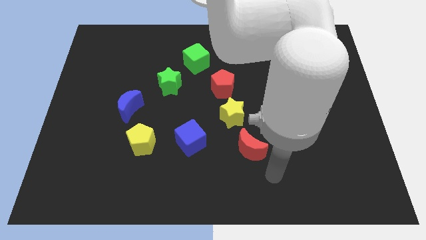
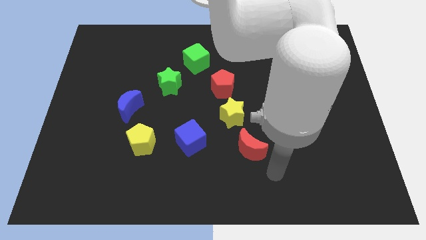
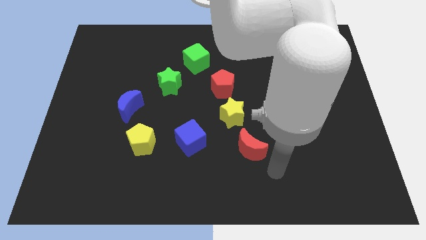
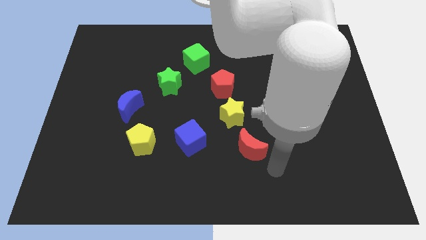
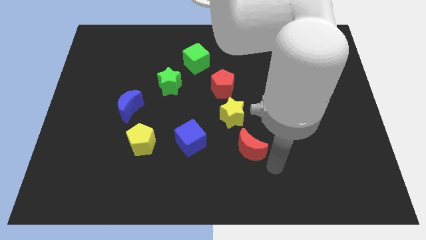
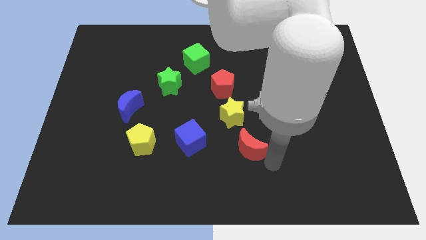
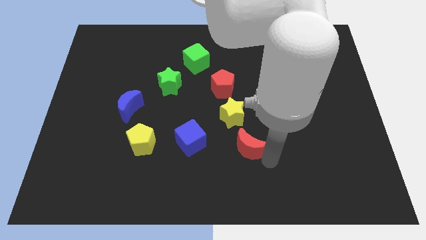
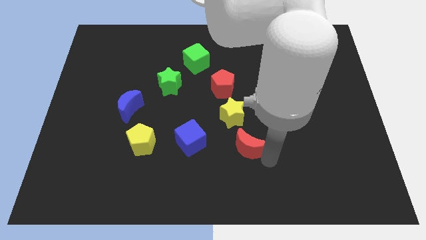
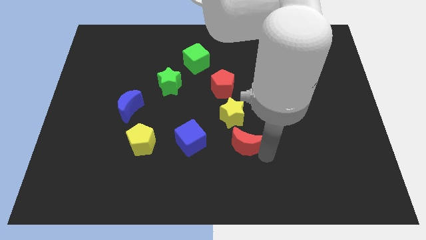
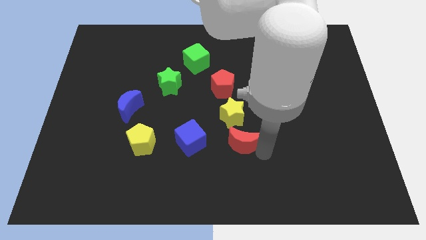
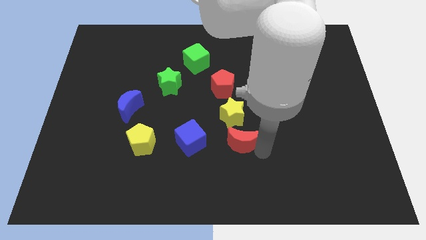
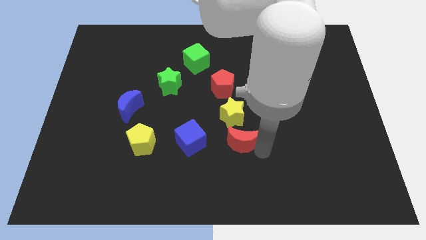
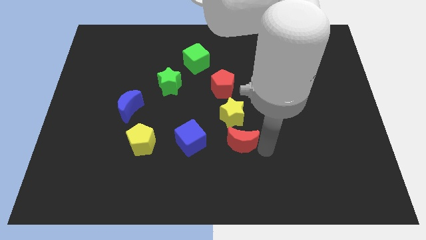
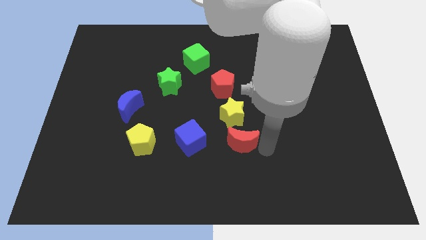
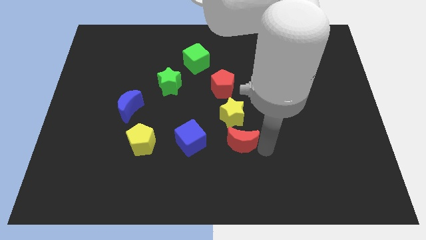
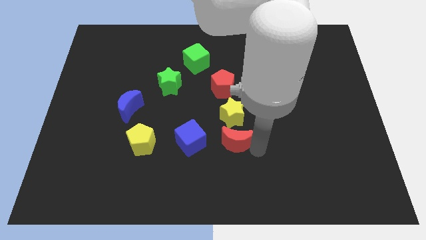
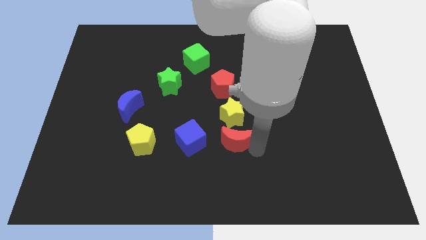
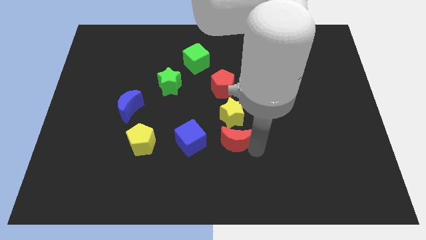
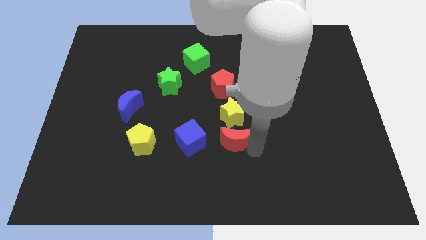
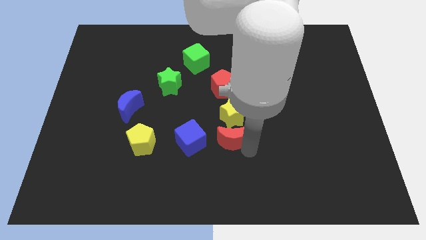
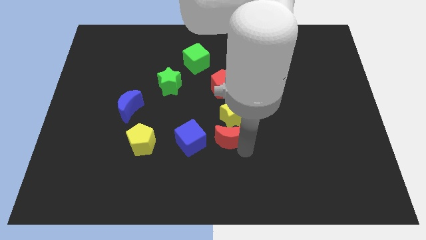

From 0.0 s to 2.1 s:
place red moon below the yellow star

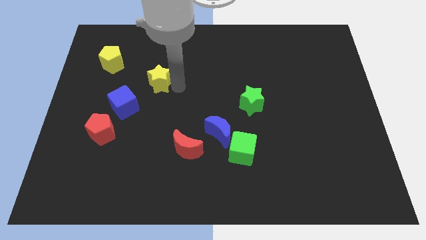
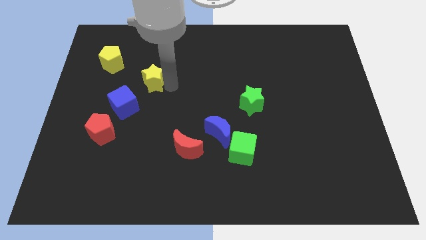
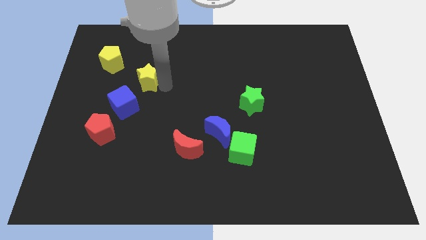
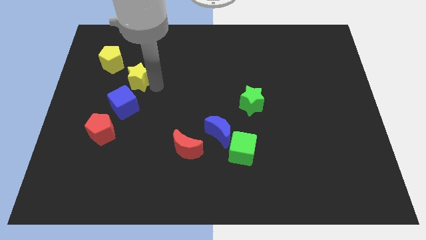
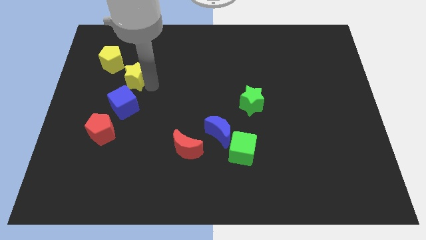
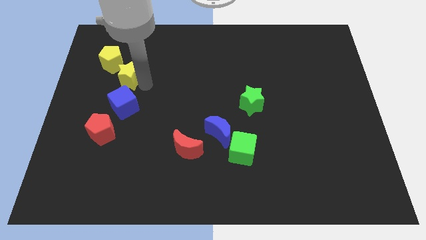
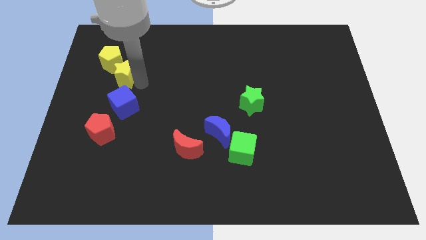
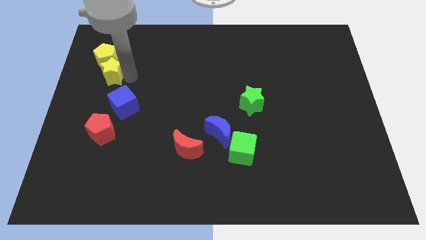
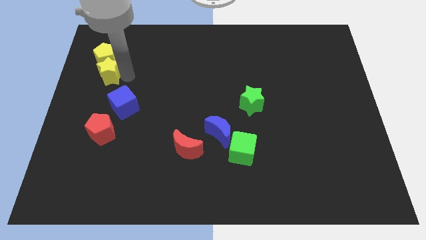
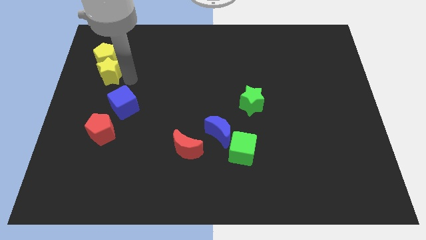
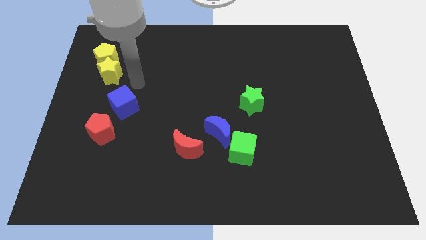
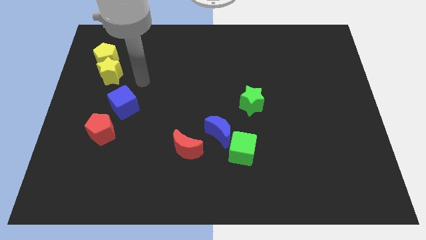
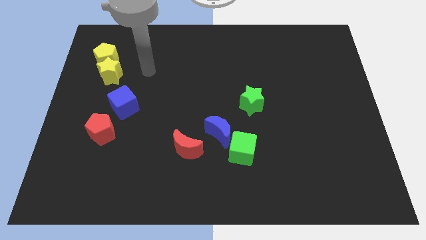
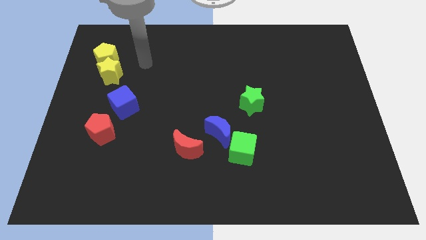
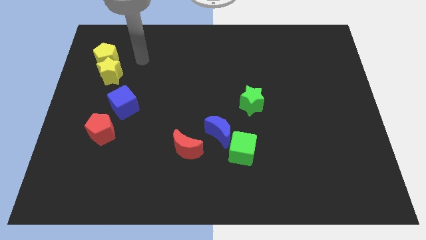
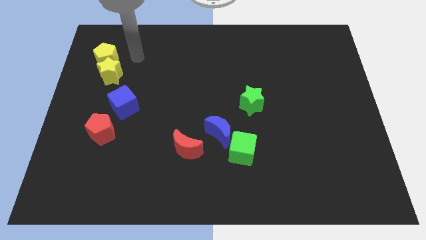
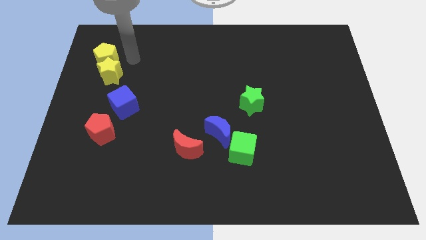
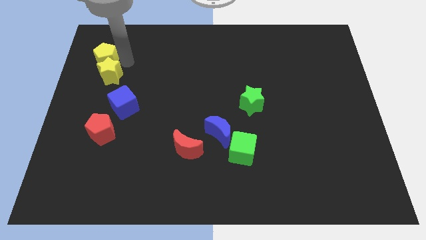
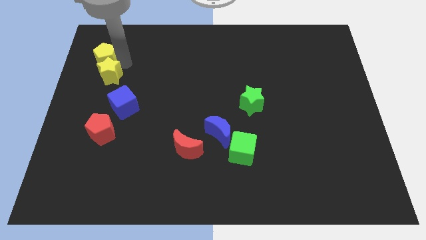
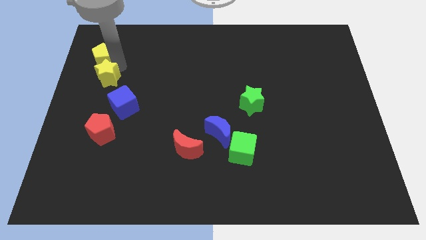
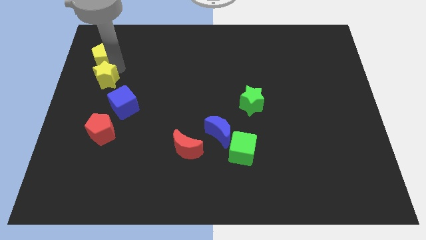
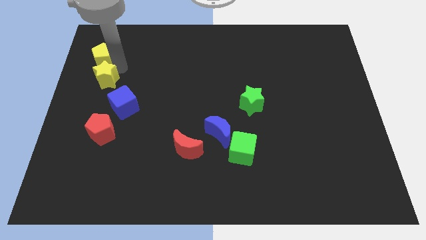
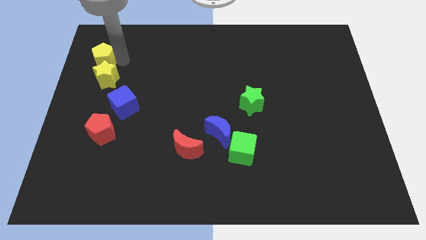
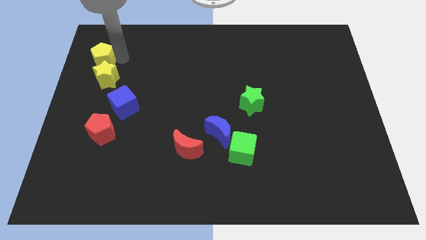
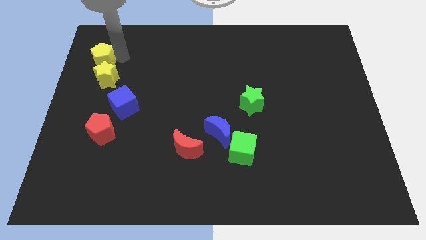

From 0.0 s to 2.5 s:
move the yellow pentagon into the yellow star

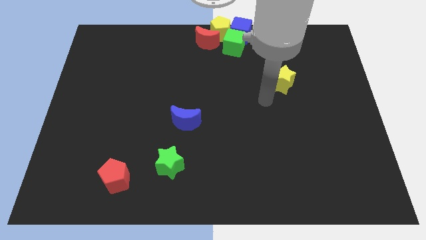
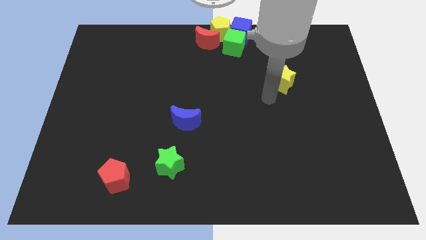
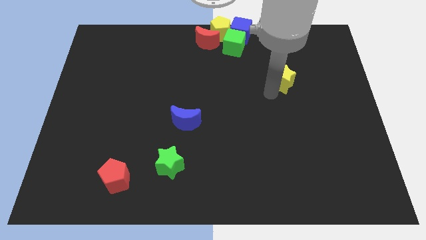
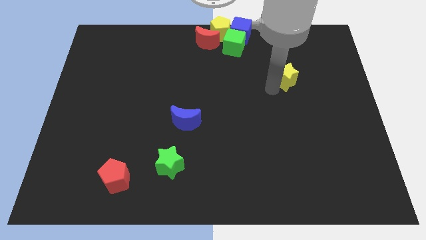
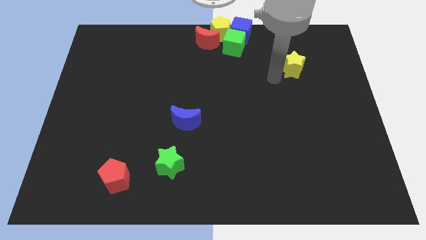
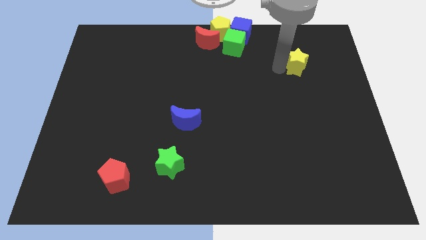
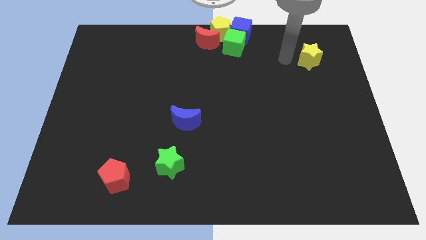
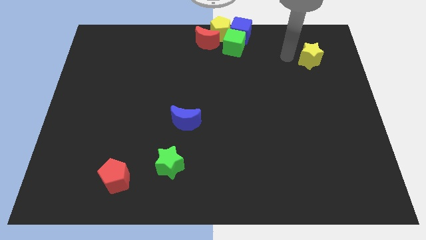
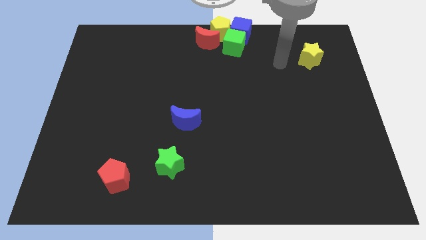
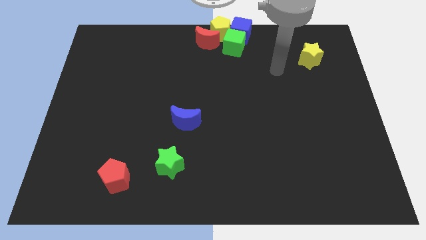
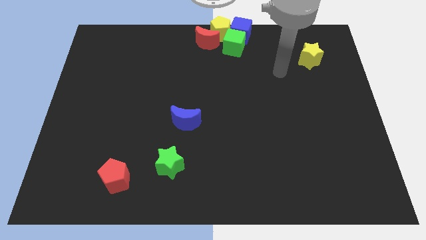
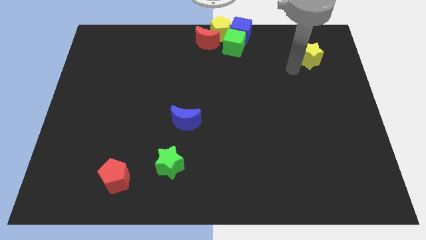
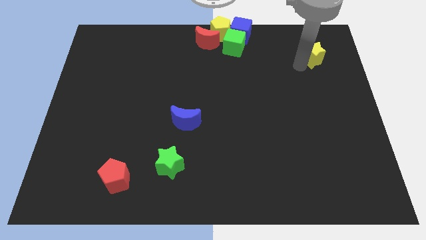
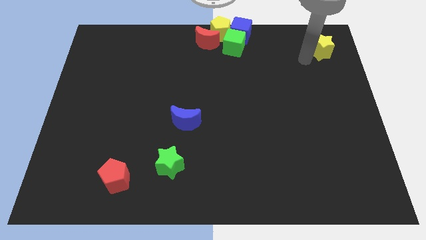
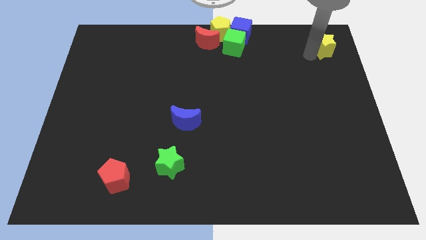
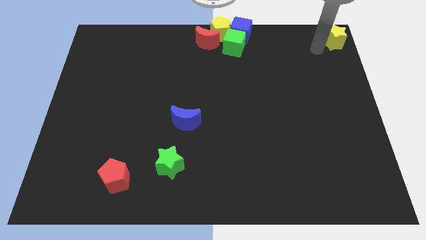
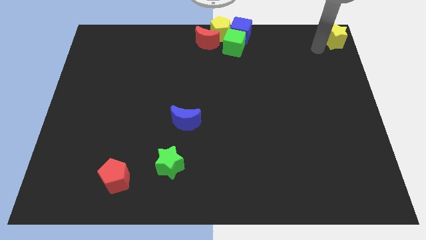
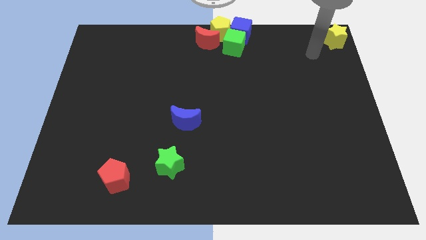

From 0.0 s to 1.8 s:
push the yellow star to the top right corner

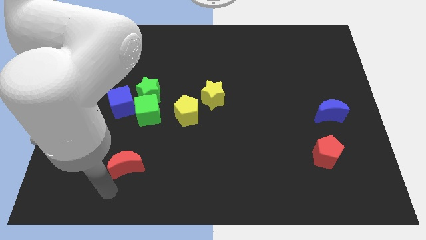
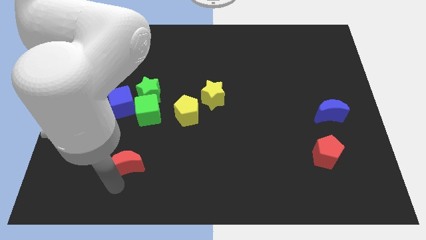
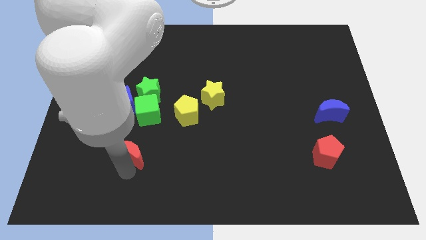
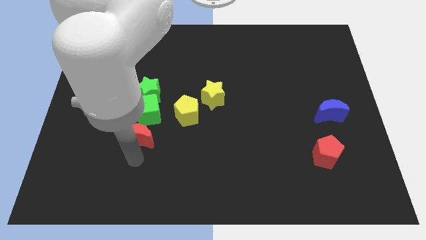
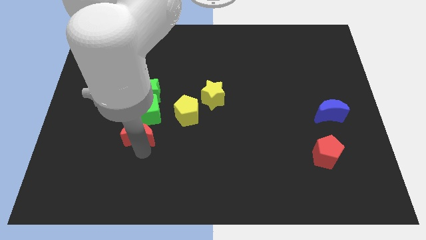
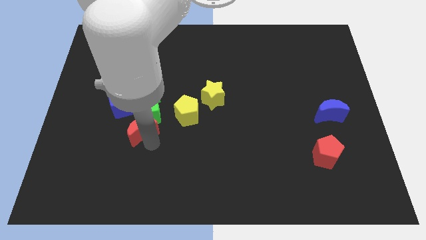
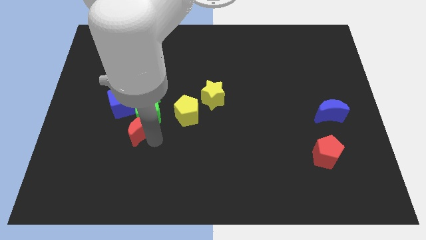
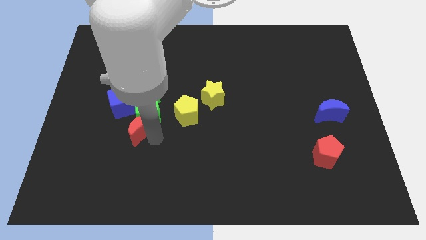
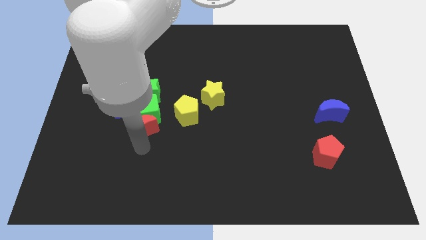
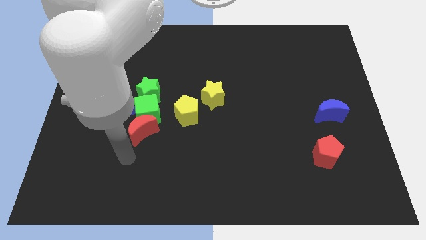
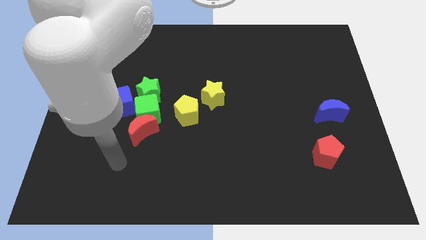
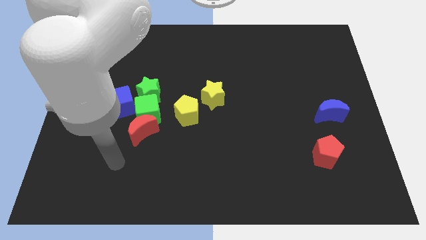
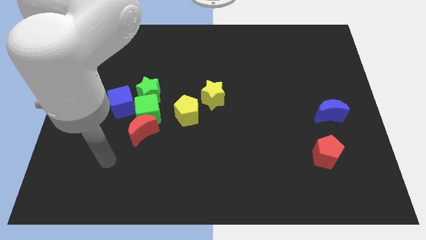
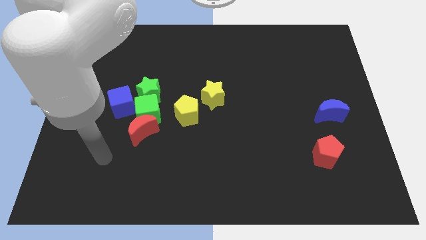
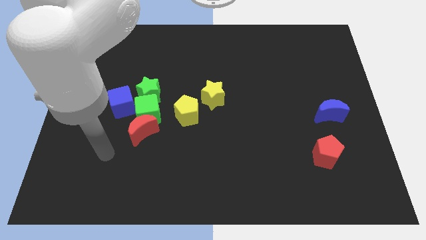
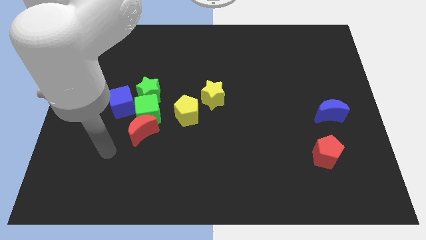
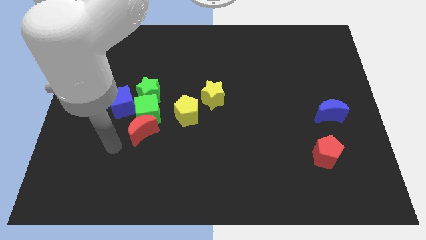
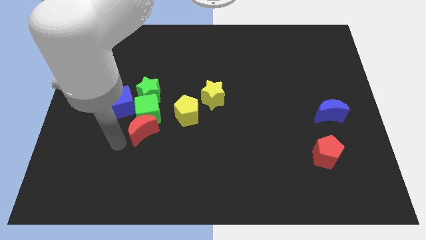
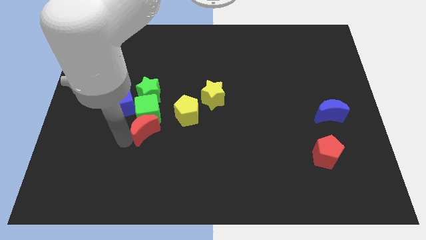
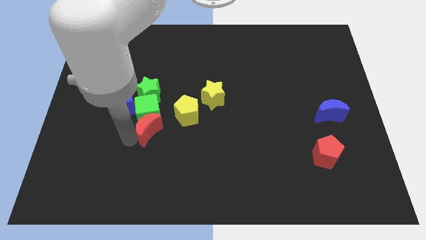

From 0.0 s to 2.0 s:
push the red crescent to the bottom of the green cube

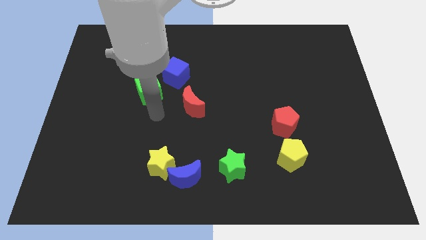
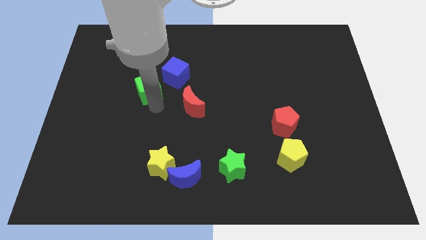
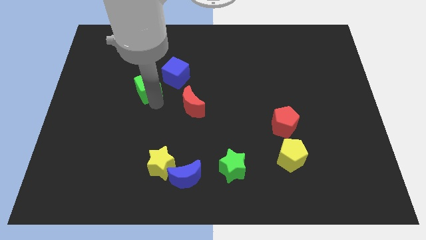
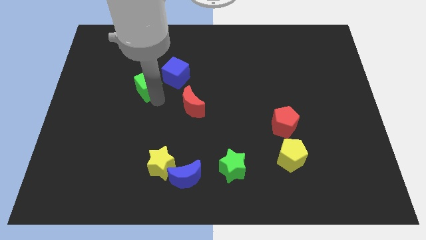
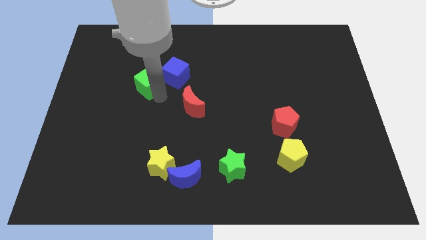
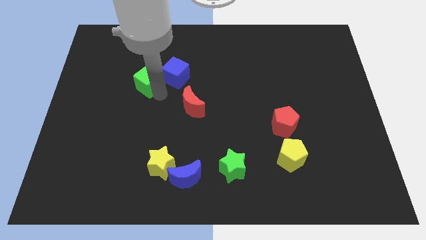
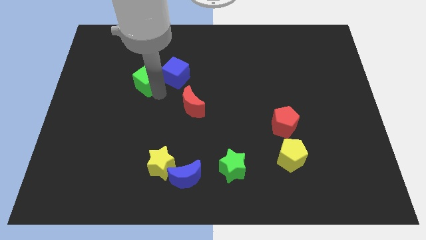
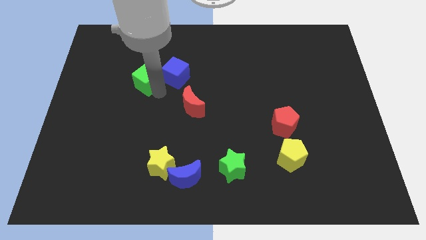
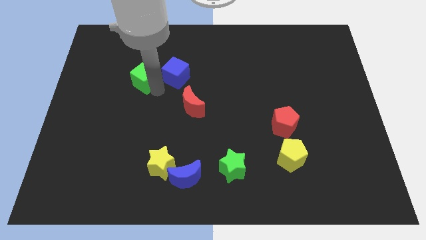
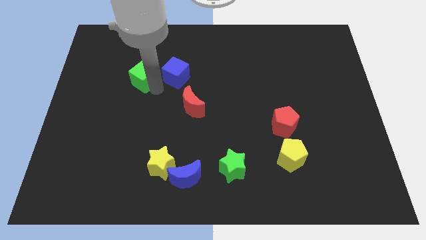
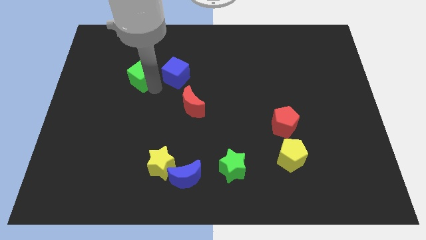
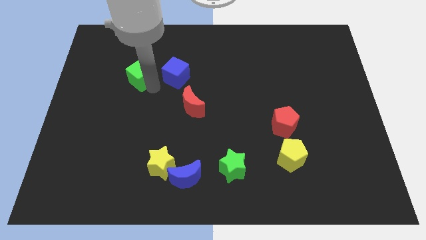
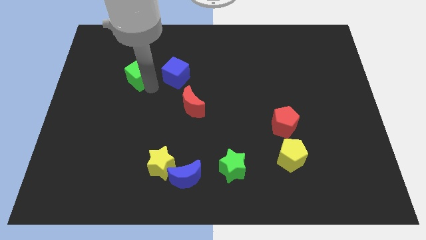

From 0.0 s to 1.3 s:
place green cube to the left of blue cube
